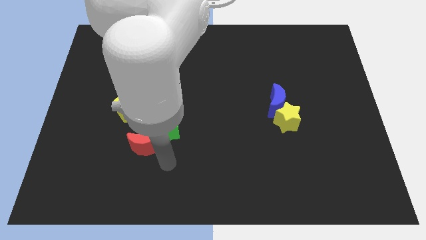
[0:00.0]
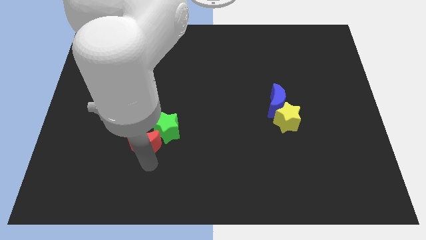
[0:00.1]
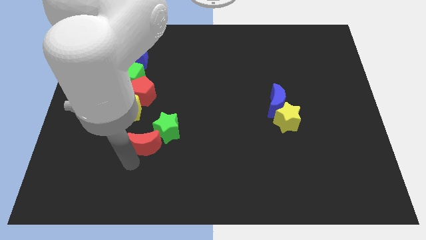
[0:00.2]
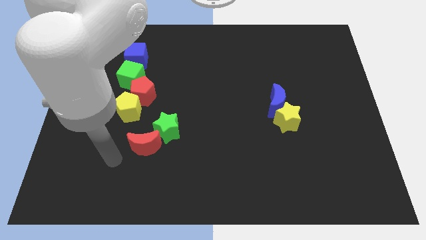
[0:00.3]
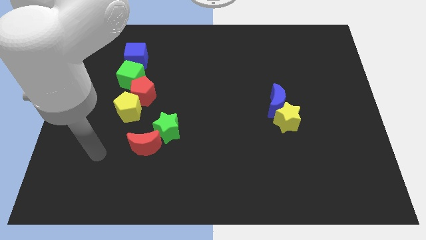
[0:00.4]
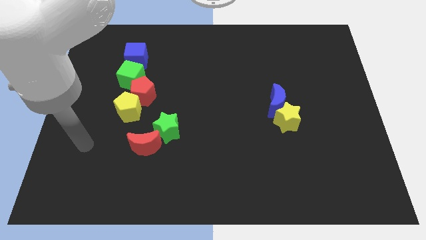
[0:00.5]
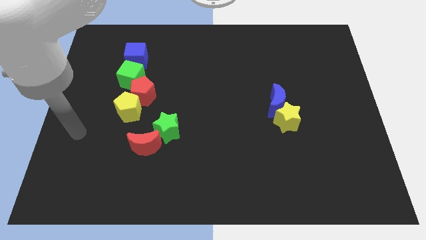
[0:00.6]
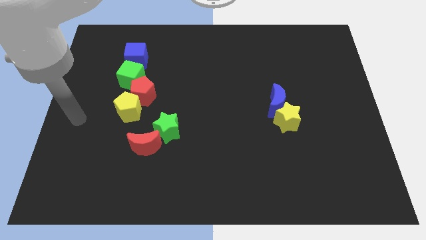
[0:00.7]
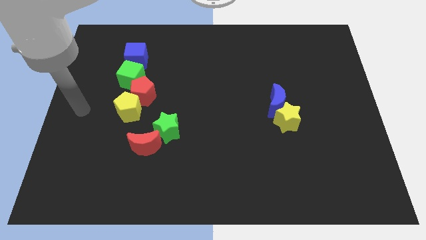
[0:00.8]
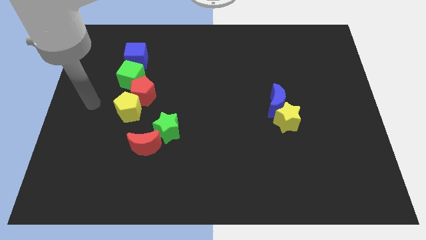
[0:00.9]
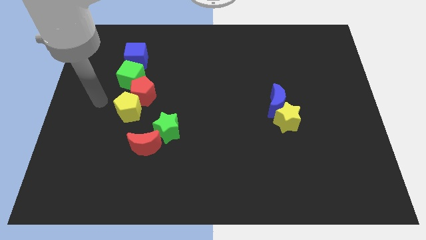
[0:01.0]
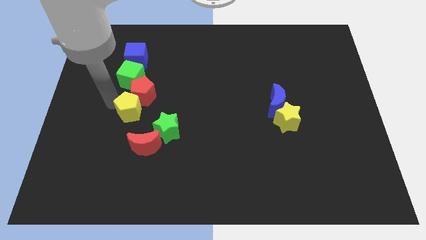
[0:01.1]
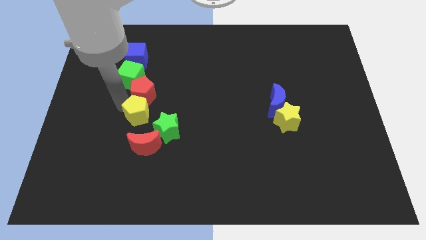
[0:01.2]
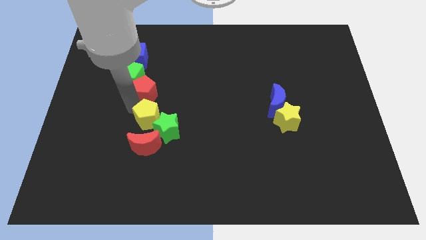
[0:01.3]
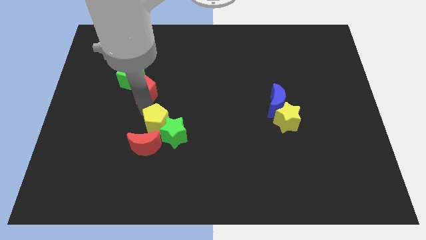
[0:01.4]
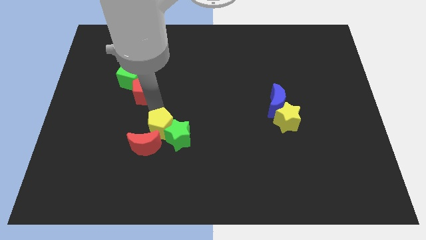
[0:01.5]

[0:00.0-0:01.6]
separate the yellow pentagon from red crescent

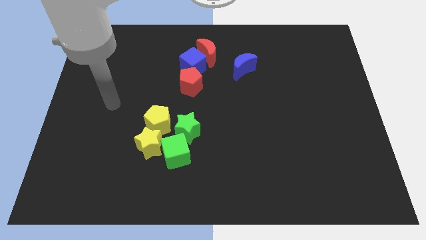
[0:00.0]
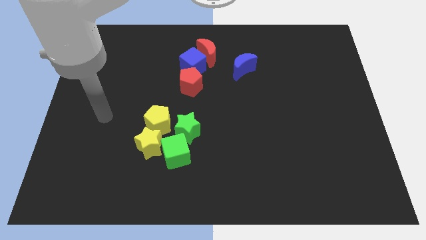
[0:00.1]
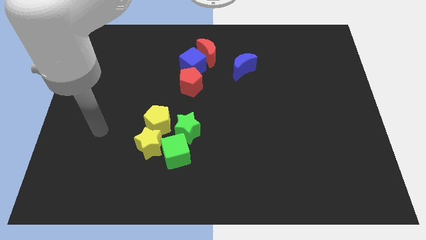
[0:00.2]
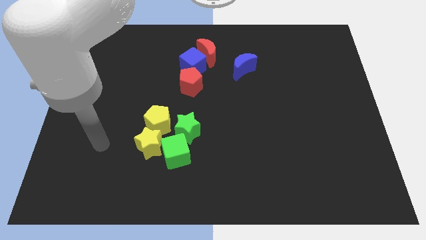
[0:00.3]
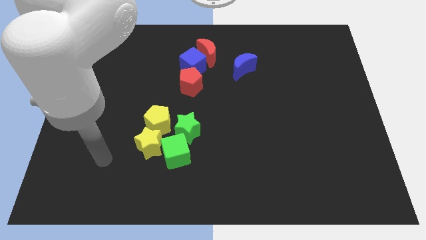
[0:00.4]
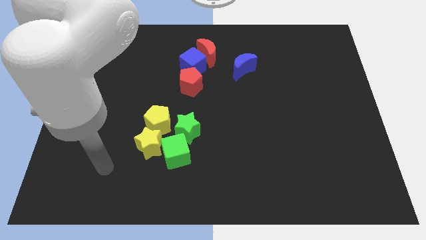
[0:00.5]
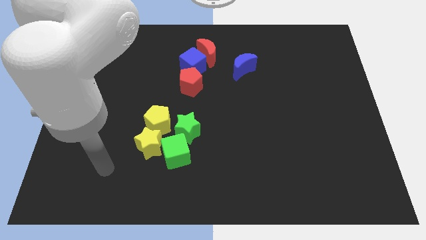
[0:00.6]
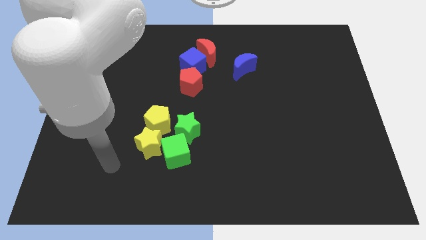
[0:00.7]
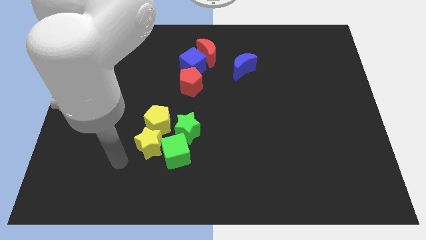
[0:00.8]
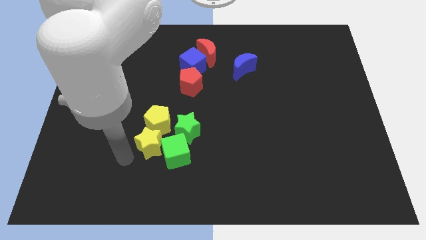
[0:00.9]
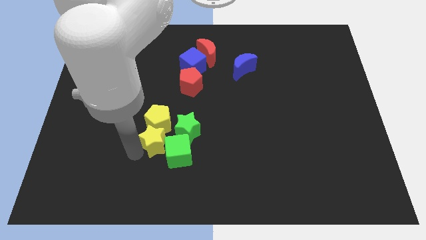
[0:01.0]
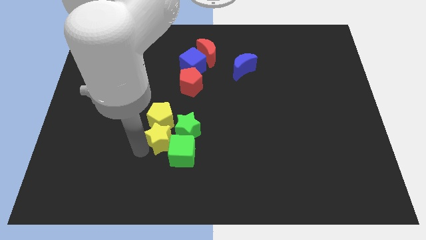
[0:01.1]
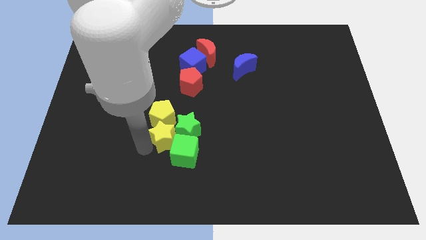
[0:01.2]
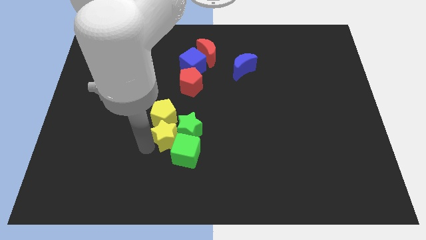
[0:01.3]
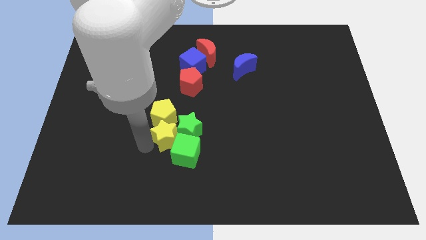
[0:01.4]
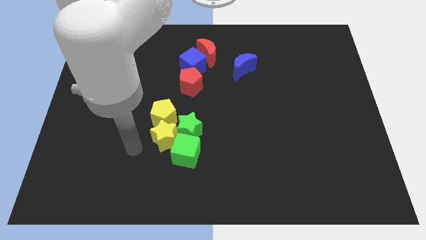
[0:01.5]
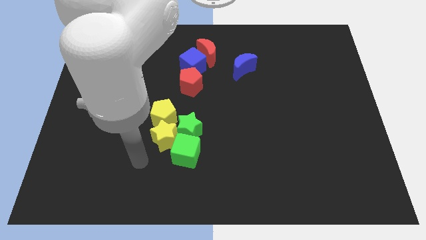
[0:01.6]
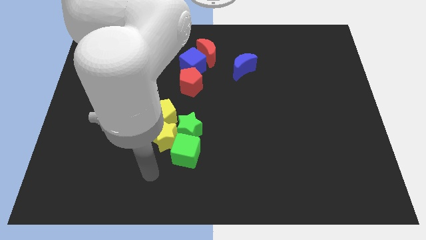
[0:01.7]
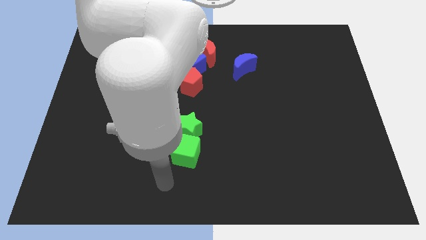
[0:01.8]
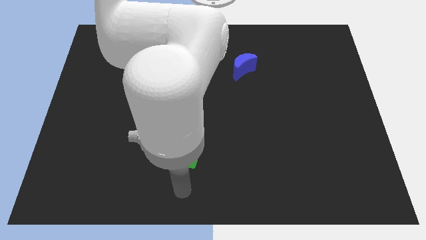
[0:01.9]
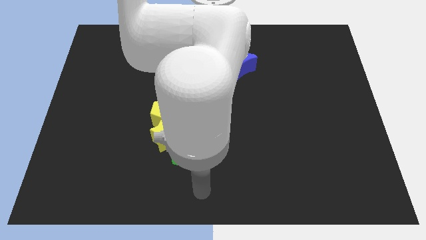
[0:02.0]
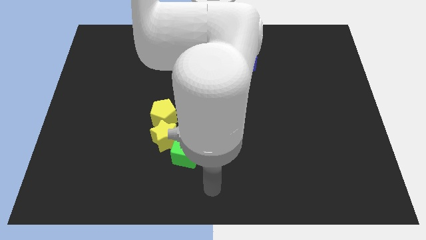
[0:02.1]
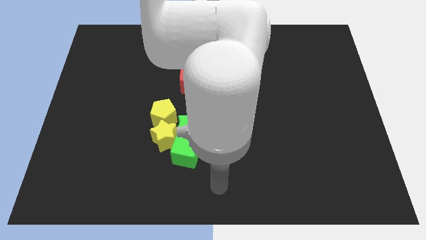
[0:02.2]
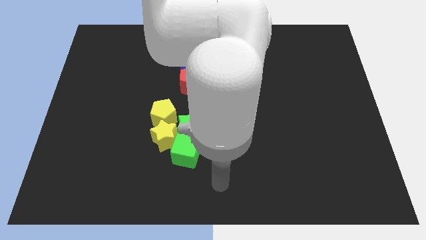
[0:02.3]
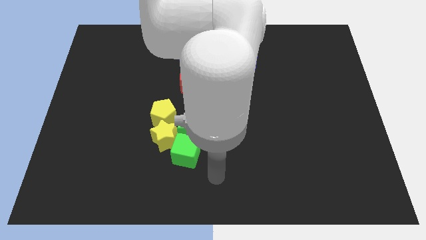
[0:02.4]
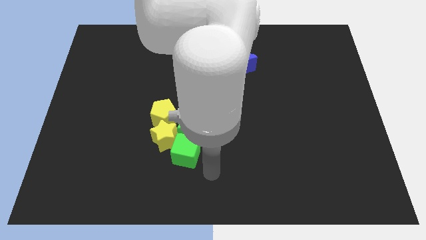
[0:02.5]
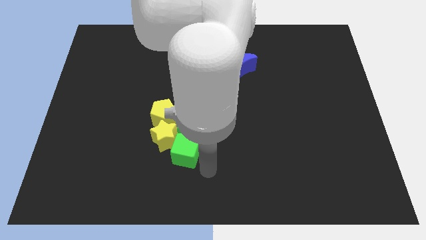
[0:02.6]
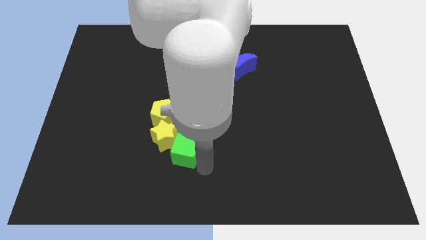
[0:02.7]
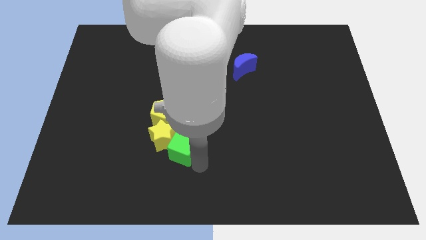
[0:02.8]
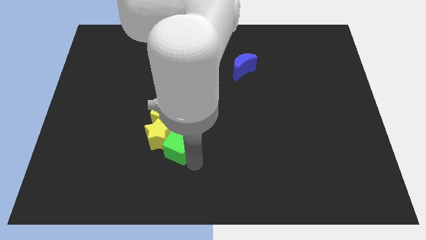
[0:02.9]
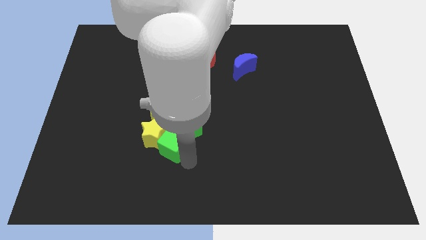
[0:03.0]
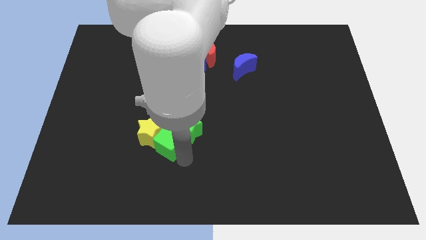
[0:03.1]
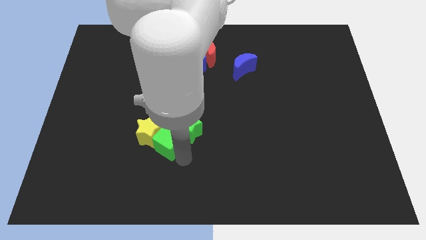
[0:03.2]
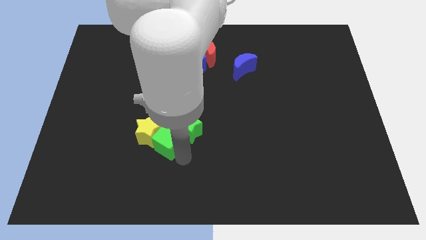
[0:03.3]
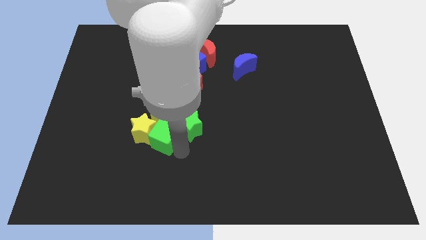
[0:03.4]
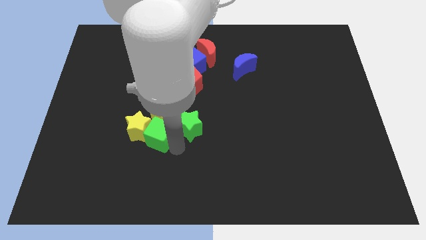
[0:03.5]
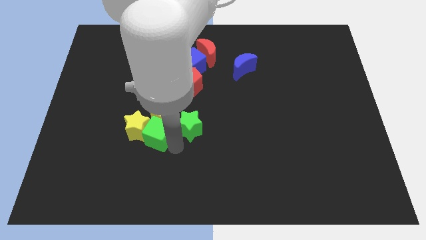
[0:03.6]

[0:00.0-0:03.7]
push green cube below yellow pentagon

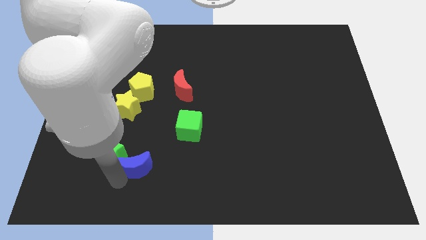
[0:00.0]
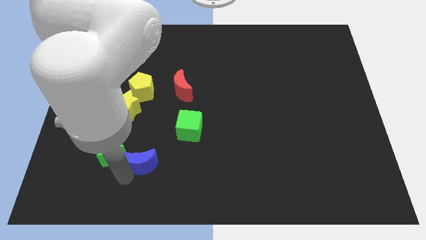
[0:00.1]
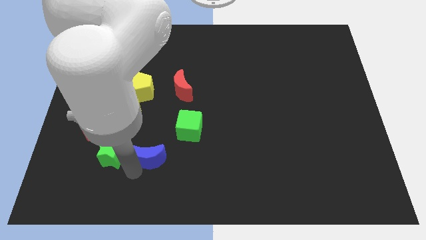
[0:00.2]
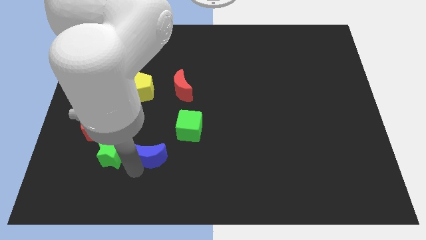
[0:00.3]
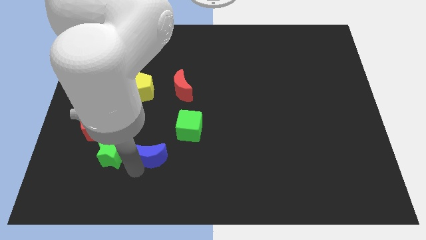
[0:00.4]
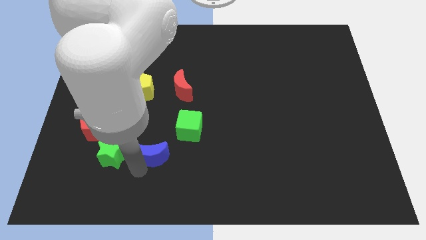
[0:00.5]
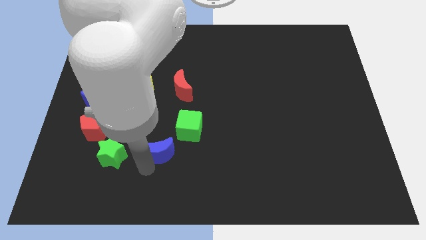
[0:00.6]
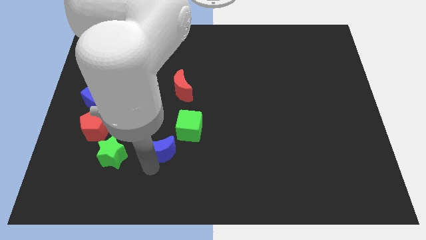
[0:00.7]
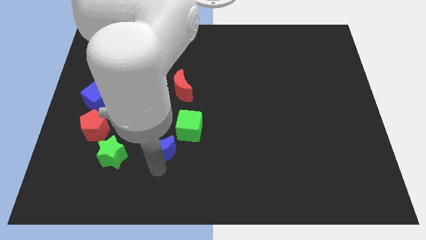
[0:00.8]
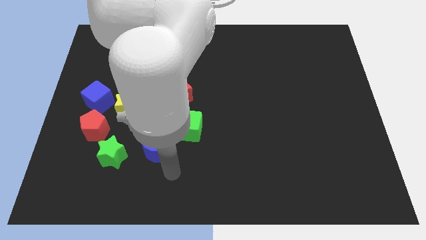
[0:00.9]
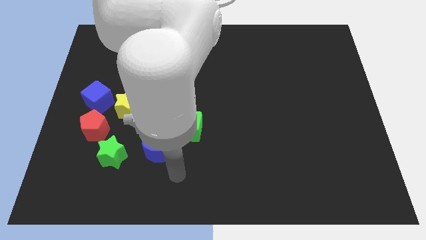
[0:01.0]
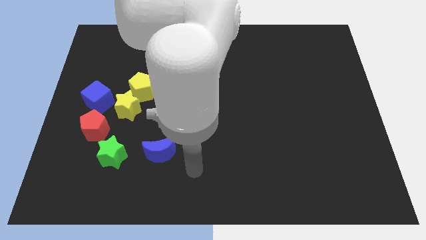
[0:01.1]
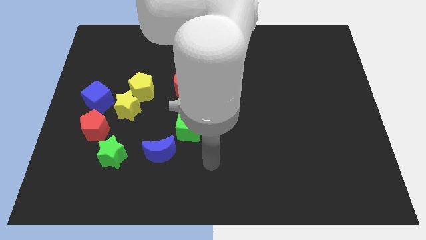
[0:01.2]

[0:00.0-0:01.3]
move blue moon to the bottom left of the green cube

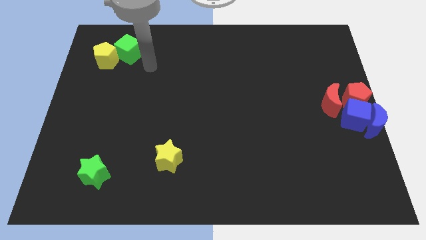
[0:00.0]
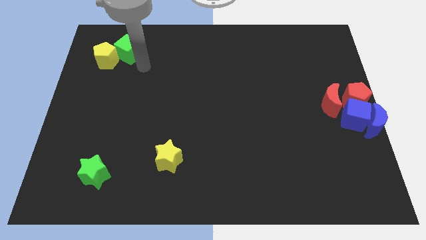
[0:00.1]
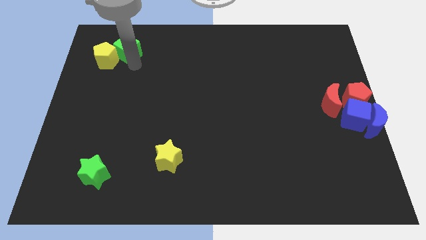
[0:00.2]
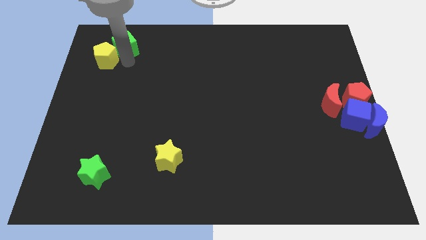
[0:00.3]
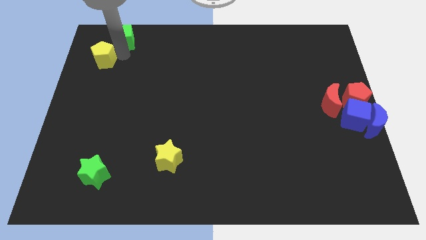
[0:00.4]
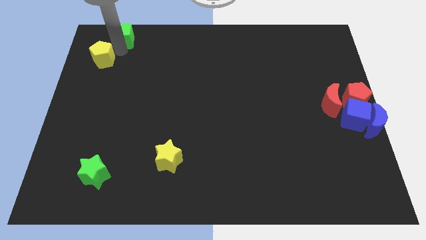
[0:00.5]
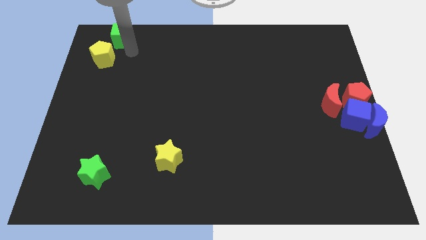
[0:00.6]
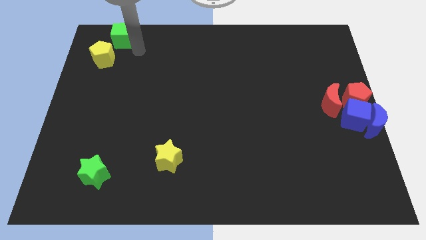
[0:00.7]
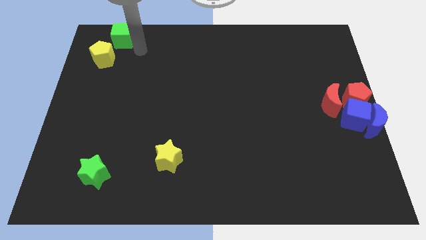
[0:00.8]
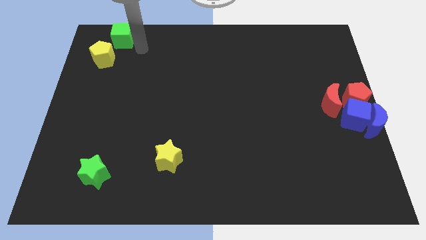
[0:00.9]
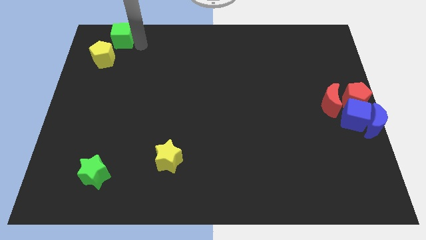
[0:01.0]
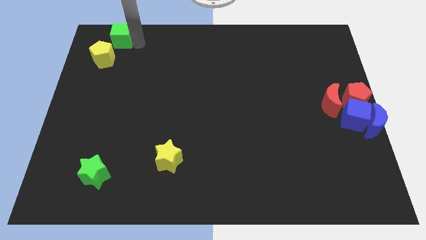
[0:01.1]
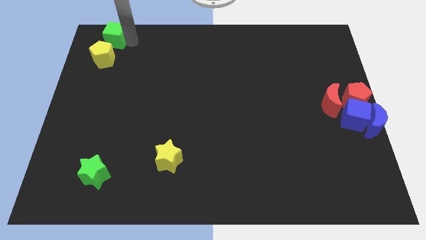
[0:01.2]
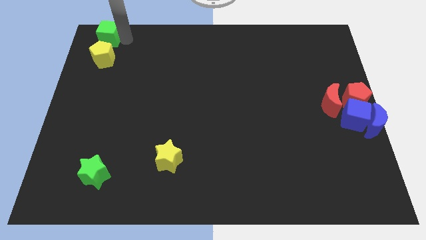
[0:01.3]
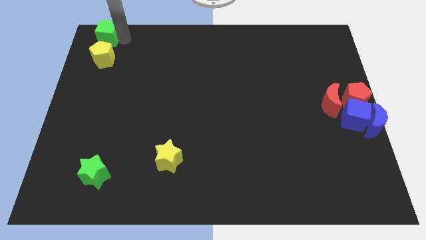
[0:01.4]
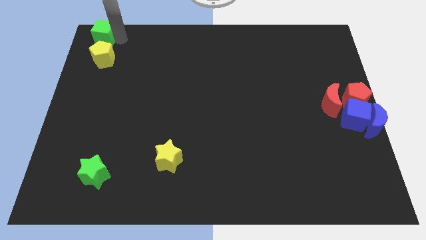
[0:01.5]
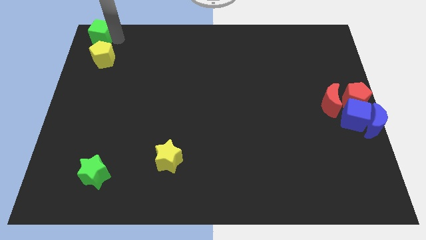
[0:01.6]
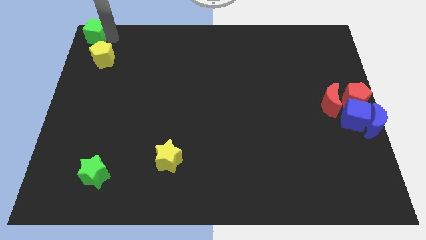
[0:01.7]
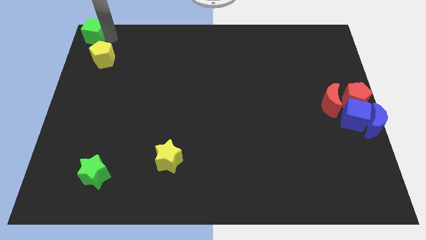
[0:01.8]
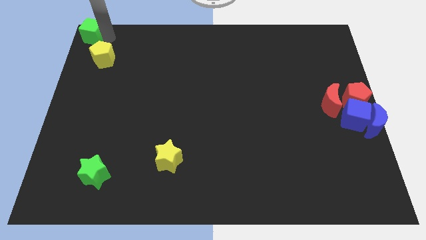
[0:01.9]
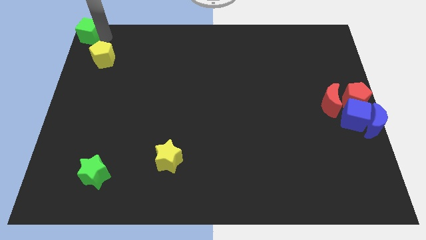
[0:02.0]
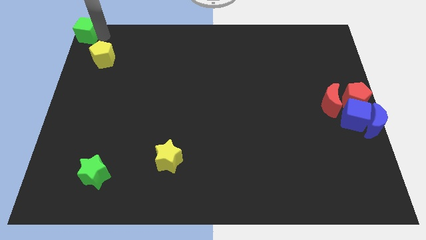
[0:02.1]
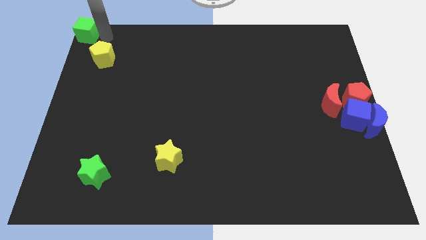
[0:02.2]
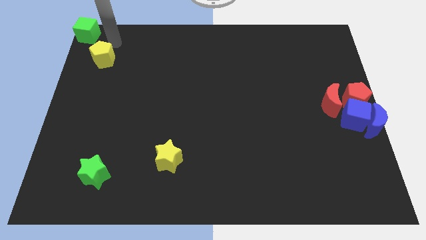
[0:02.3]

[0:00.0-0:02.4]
place the green cube at the top left corner of the board

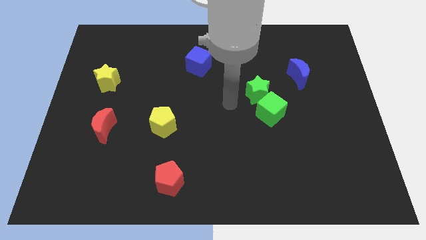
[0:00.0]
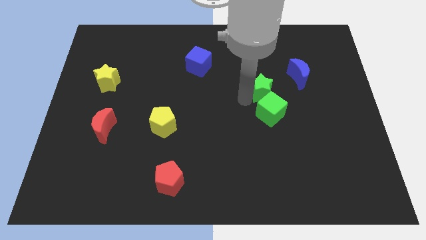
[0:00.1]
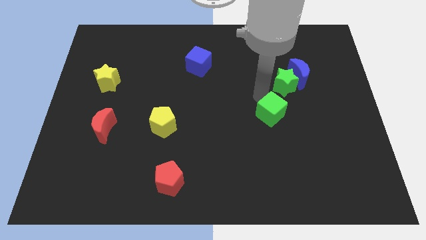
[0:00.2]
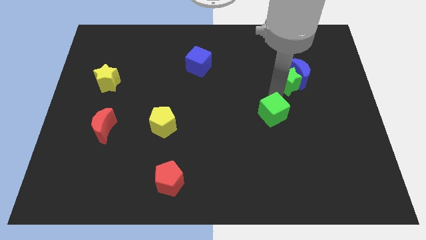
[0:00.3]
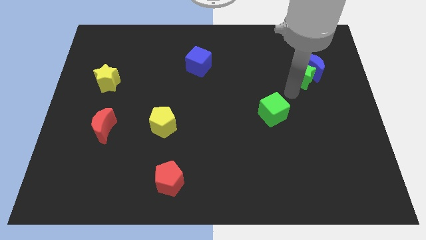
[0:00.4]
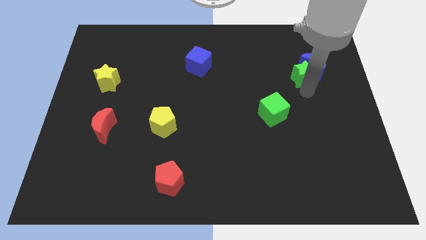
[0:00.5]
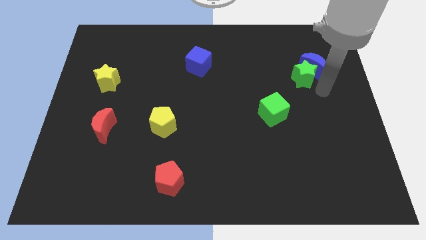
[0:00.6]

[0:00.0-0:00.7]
push green star towards blue crescent
